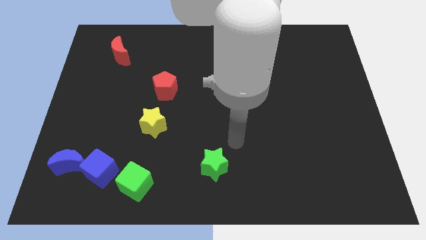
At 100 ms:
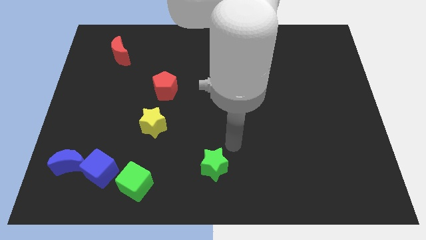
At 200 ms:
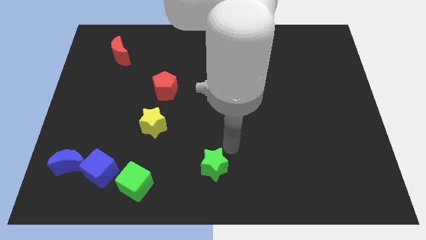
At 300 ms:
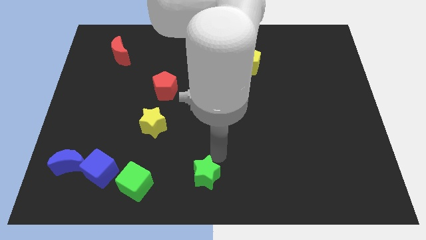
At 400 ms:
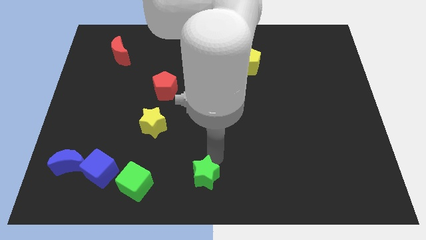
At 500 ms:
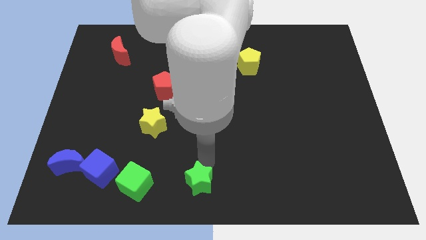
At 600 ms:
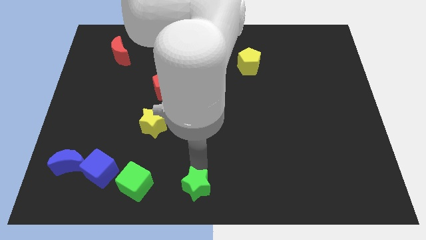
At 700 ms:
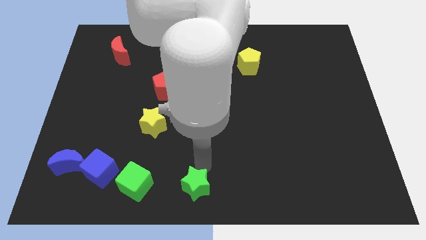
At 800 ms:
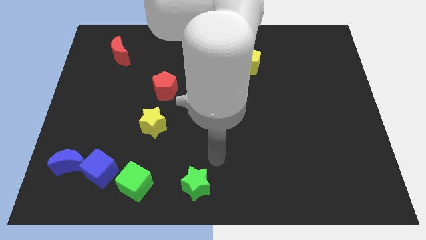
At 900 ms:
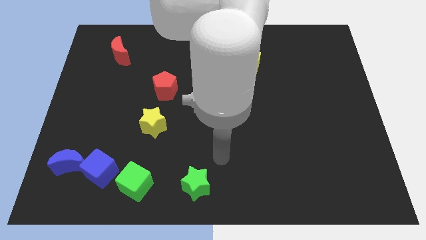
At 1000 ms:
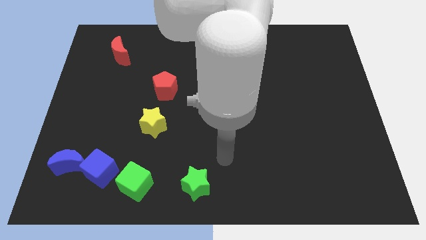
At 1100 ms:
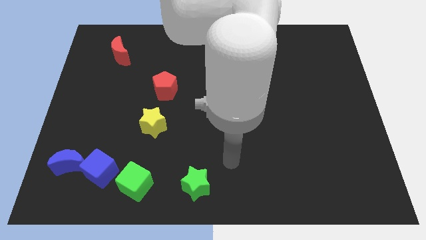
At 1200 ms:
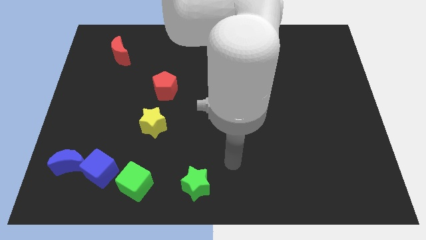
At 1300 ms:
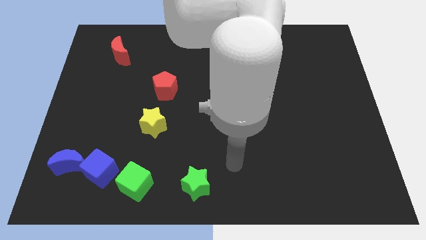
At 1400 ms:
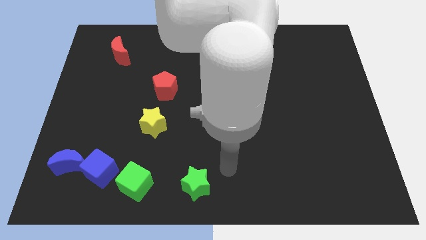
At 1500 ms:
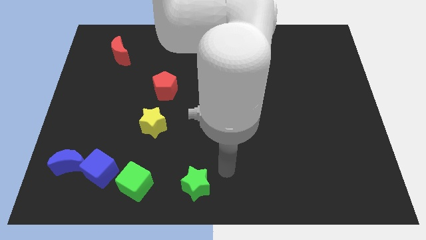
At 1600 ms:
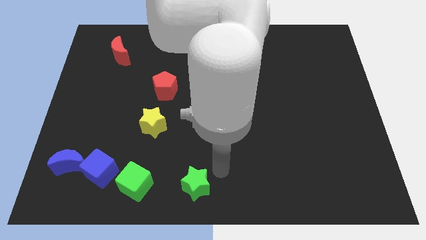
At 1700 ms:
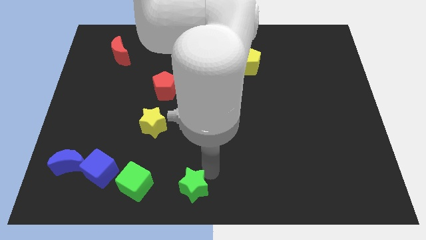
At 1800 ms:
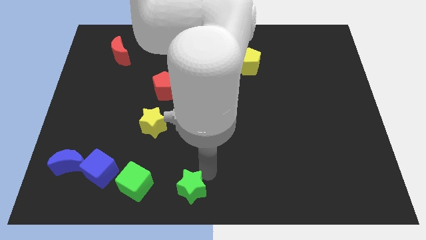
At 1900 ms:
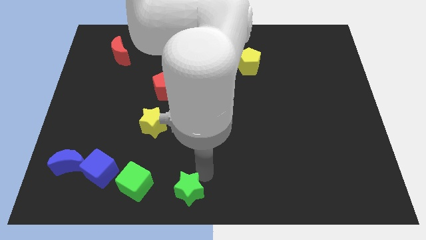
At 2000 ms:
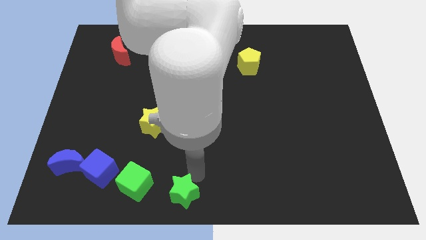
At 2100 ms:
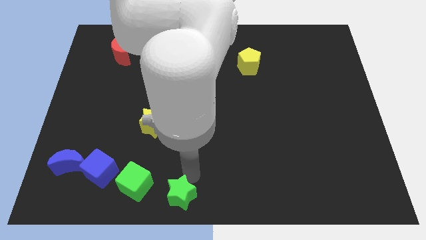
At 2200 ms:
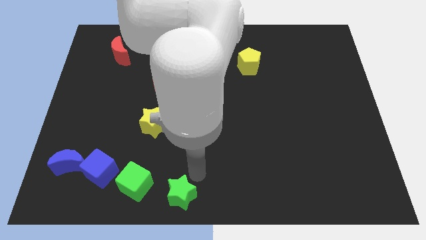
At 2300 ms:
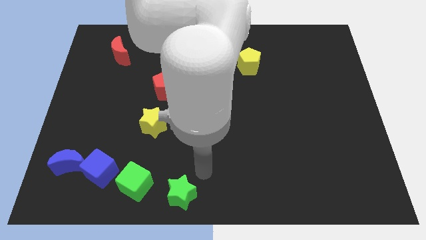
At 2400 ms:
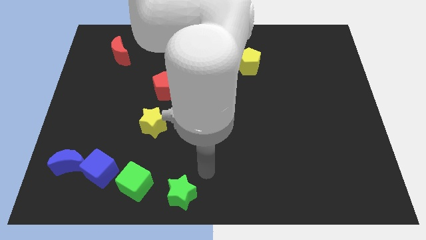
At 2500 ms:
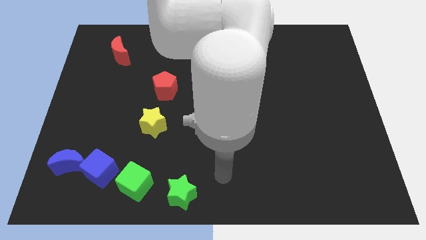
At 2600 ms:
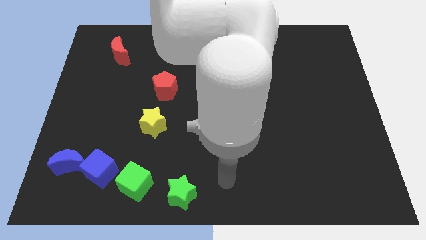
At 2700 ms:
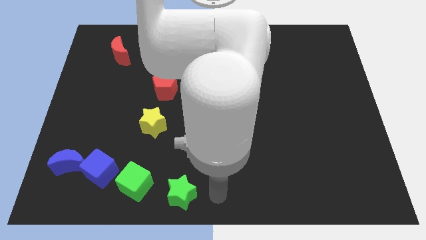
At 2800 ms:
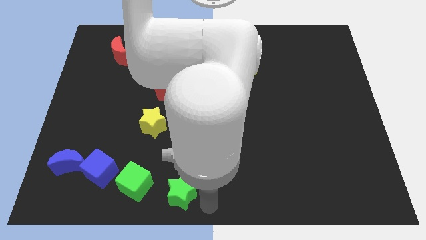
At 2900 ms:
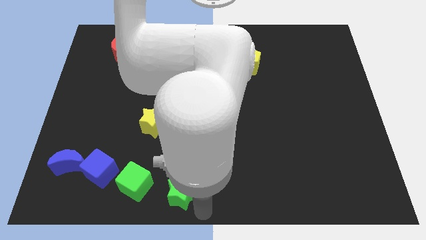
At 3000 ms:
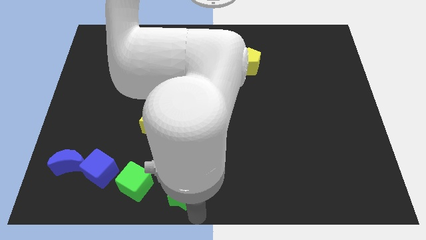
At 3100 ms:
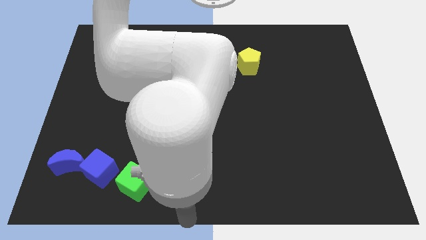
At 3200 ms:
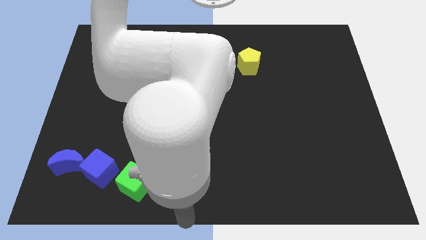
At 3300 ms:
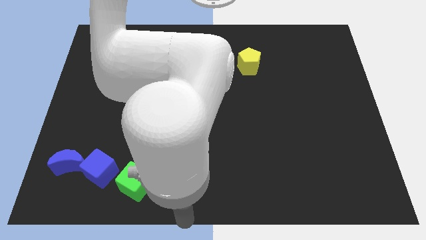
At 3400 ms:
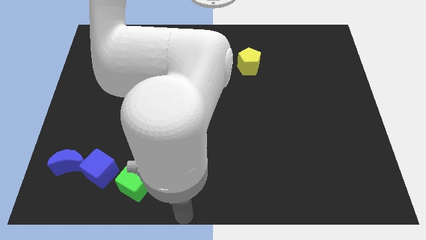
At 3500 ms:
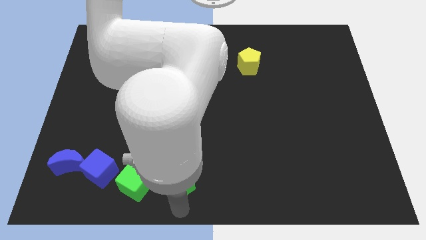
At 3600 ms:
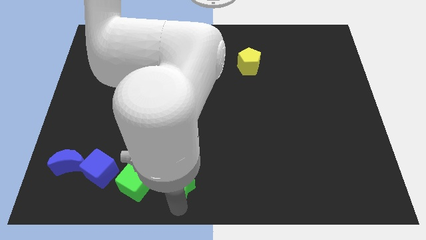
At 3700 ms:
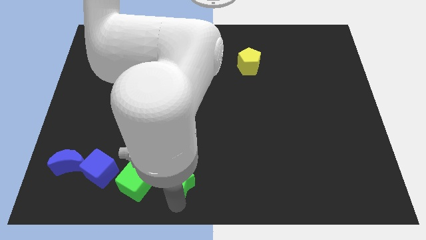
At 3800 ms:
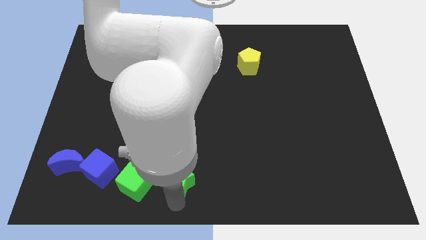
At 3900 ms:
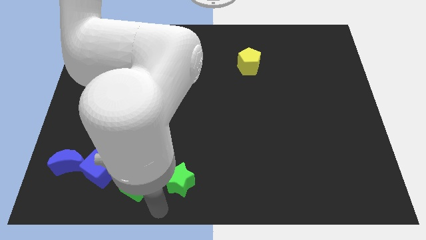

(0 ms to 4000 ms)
put the green star to the right side of the green cube

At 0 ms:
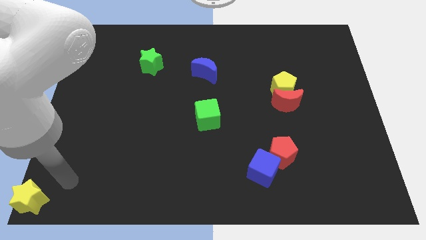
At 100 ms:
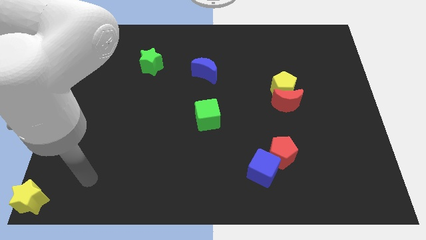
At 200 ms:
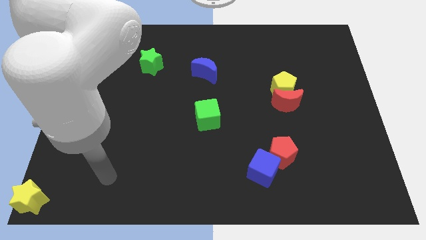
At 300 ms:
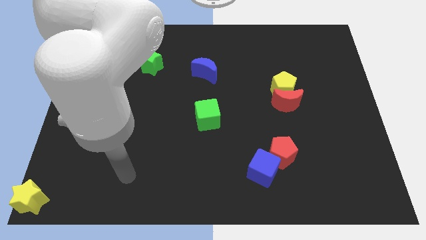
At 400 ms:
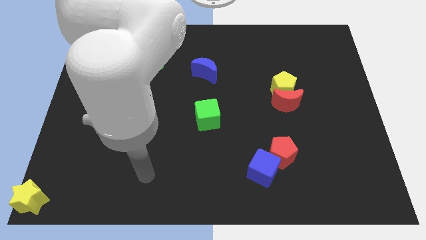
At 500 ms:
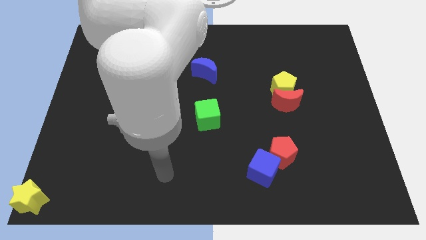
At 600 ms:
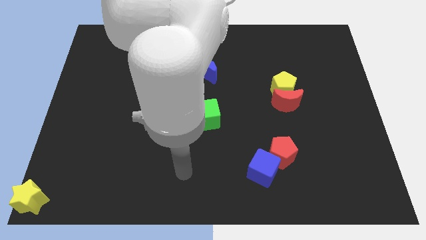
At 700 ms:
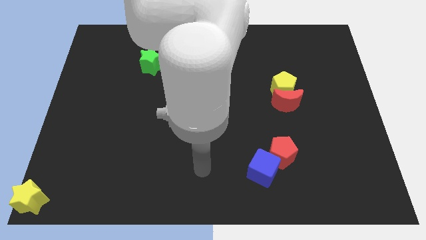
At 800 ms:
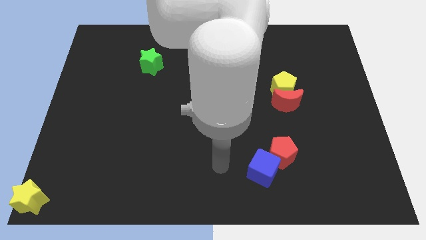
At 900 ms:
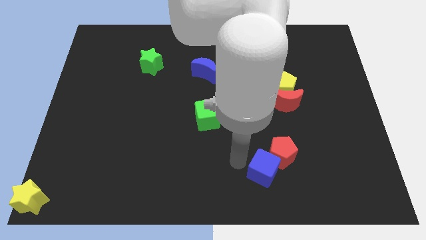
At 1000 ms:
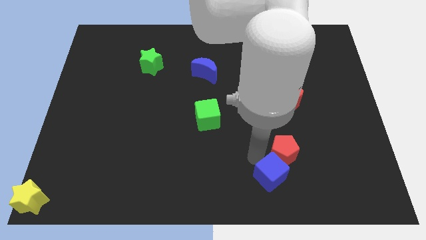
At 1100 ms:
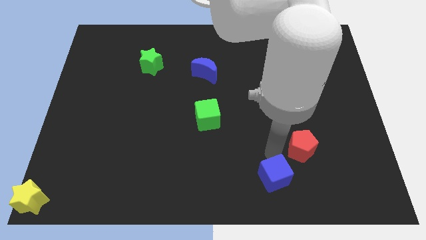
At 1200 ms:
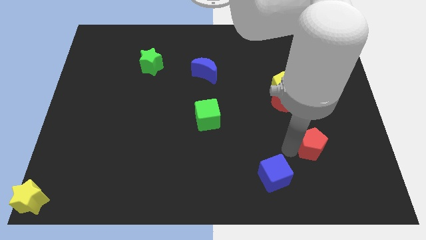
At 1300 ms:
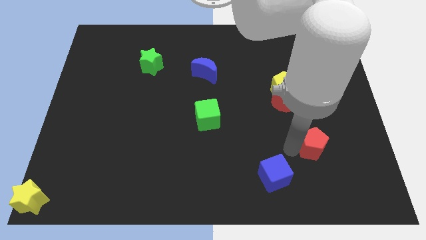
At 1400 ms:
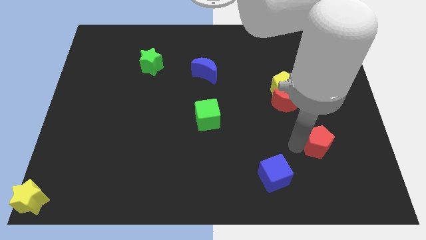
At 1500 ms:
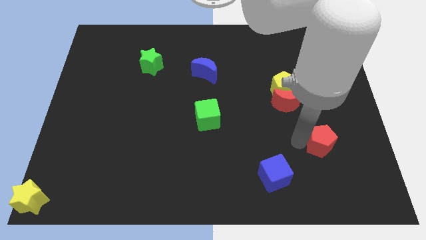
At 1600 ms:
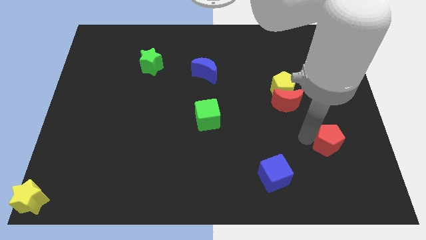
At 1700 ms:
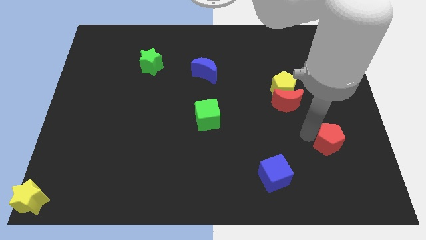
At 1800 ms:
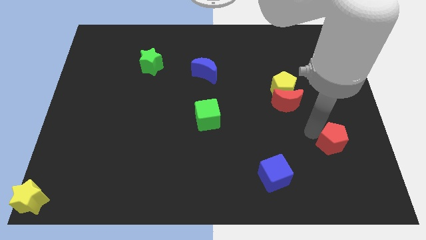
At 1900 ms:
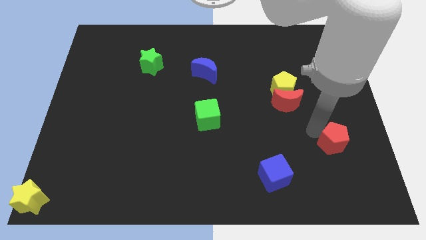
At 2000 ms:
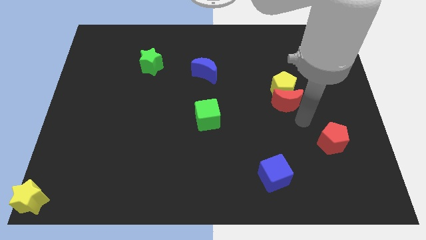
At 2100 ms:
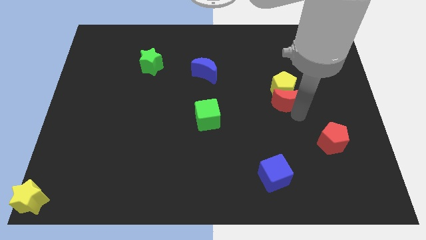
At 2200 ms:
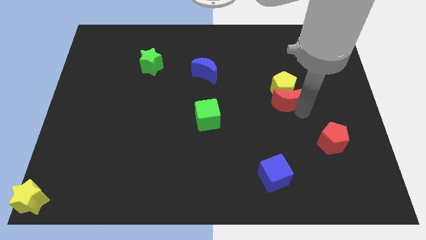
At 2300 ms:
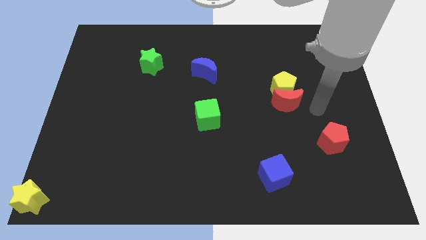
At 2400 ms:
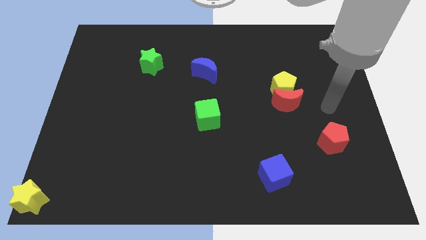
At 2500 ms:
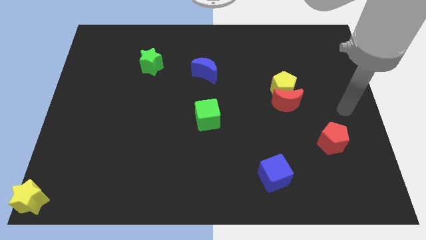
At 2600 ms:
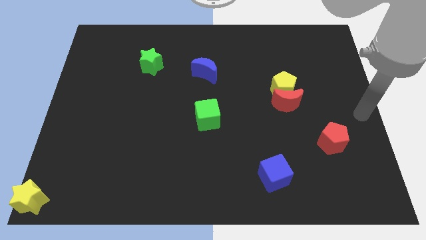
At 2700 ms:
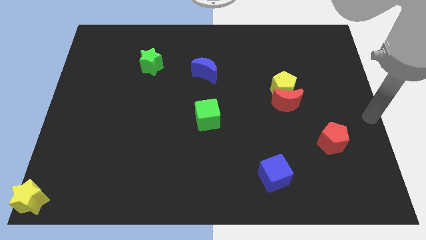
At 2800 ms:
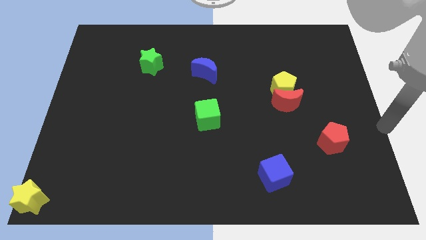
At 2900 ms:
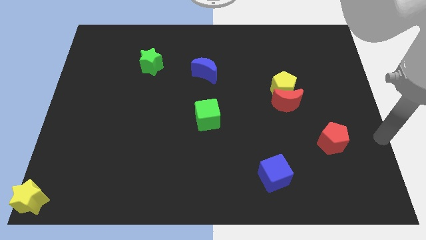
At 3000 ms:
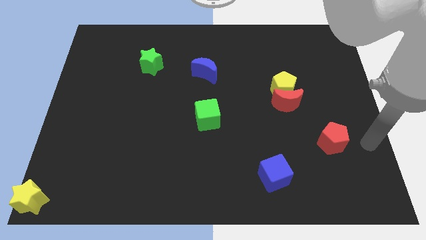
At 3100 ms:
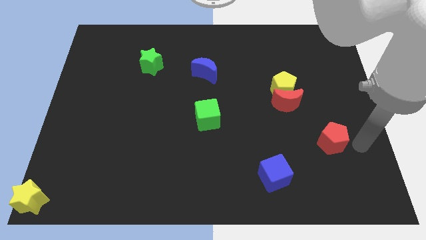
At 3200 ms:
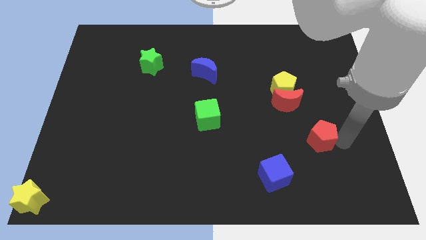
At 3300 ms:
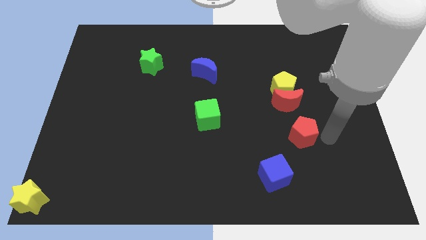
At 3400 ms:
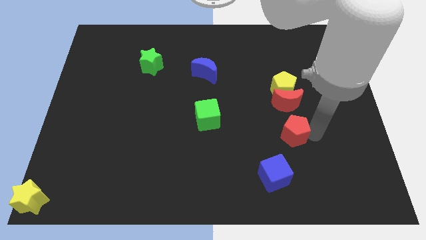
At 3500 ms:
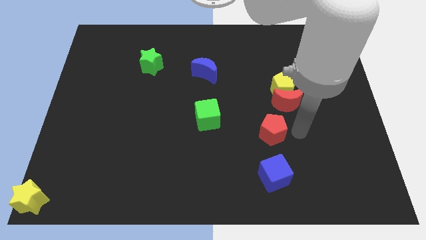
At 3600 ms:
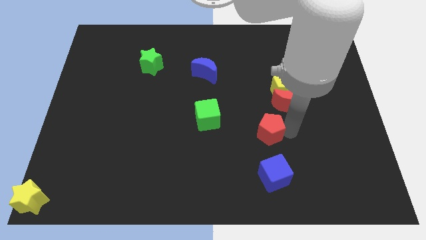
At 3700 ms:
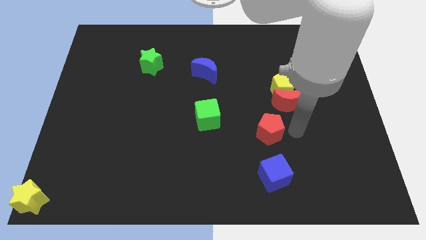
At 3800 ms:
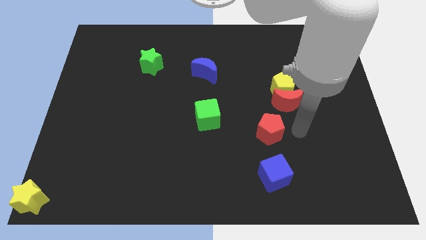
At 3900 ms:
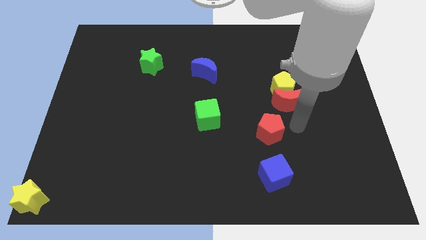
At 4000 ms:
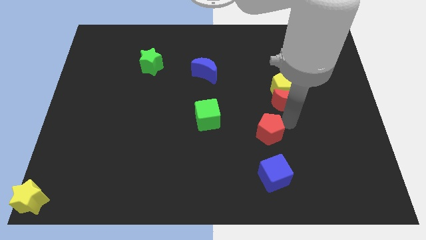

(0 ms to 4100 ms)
push the red pentagon to the top of the blue cube

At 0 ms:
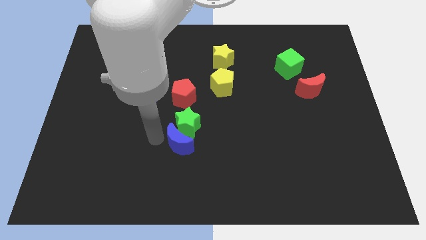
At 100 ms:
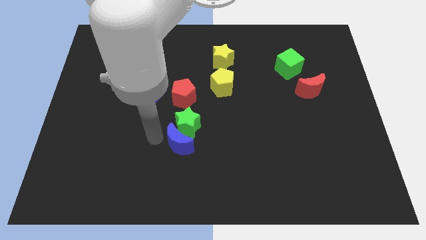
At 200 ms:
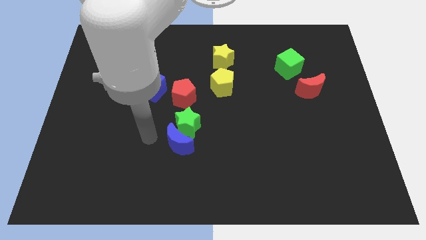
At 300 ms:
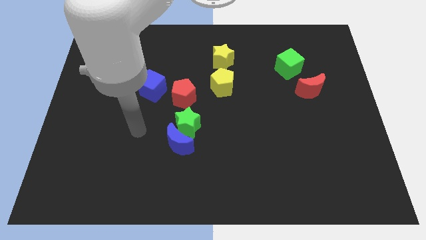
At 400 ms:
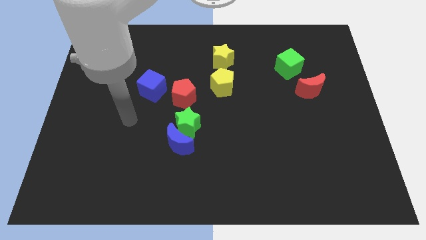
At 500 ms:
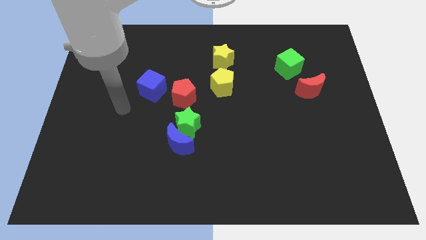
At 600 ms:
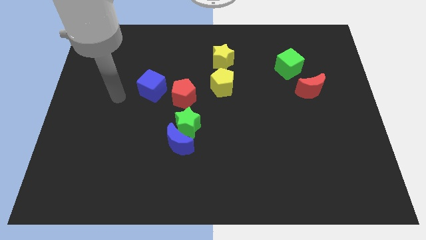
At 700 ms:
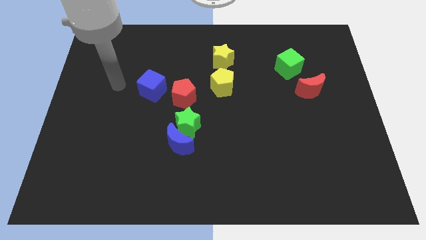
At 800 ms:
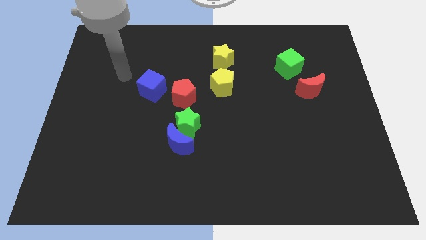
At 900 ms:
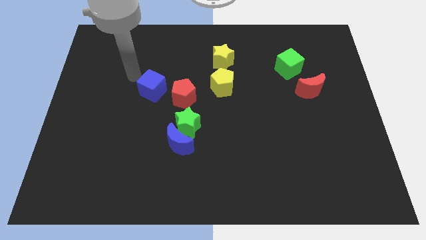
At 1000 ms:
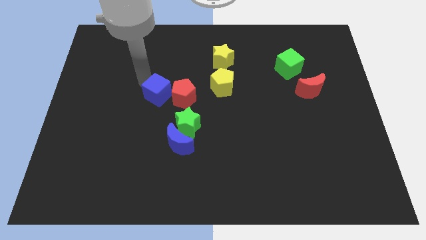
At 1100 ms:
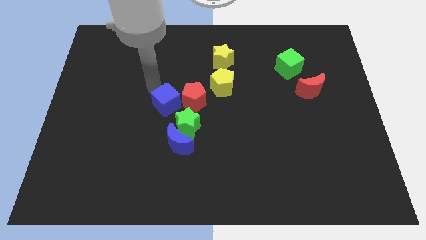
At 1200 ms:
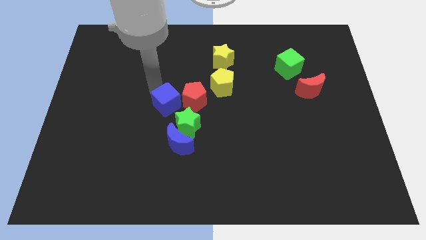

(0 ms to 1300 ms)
place the arm into the blue cube
